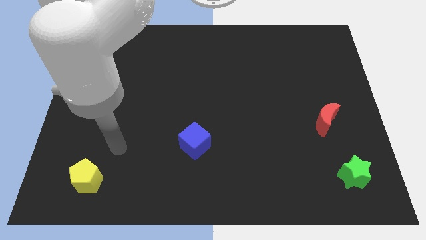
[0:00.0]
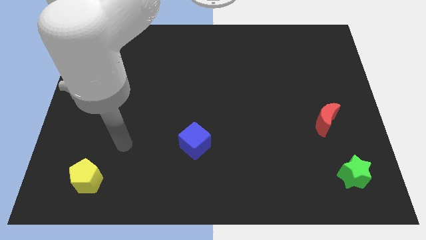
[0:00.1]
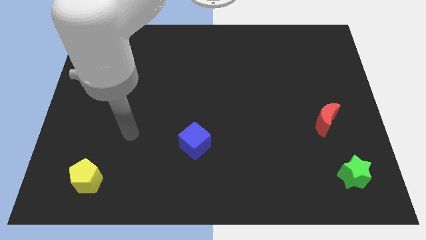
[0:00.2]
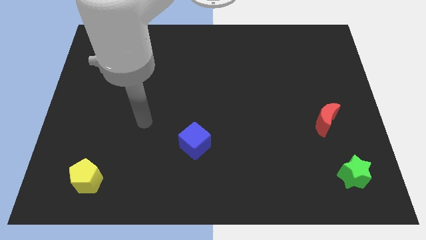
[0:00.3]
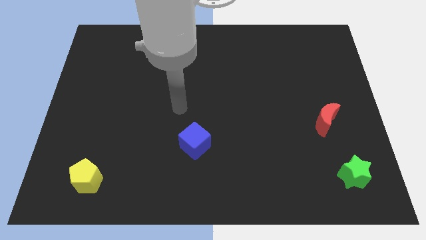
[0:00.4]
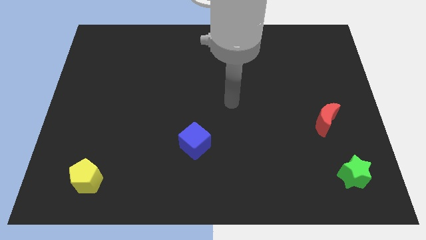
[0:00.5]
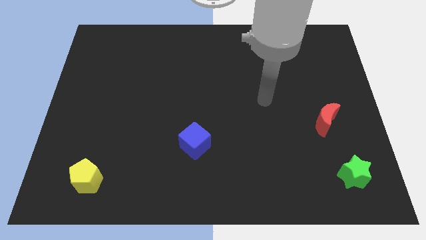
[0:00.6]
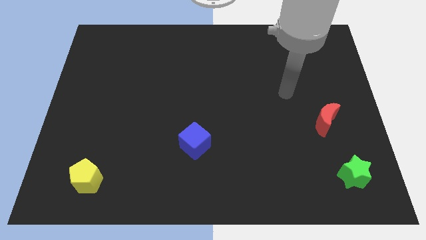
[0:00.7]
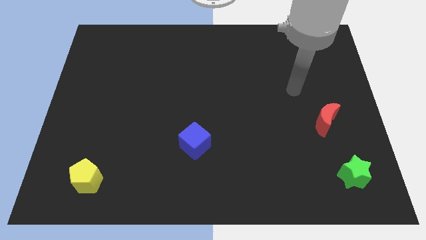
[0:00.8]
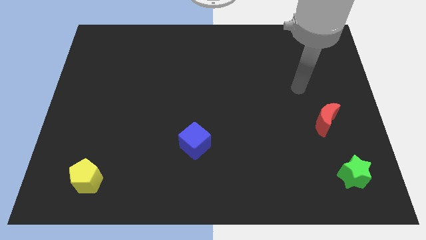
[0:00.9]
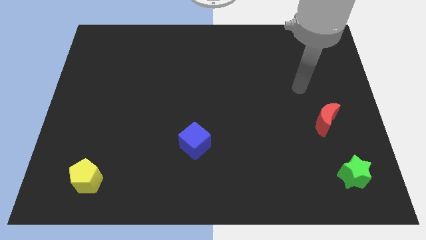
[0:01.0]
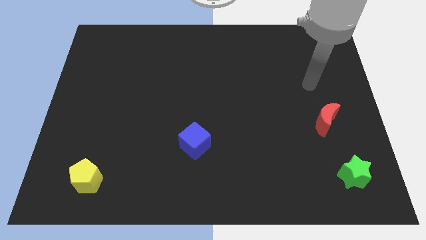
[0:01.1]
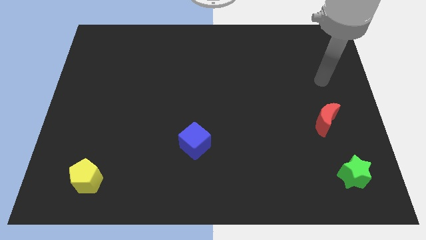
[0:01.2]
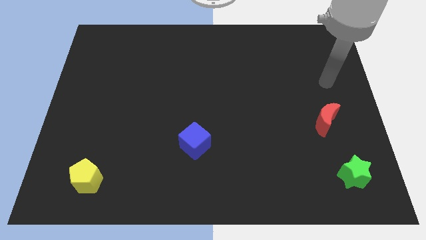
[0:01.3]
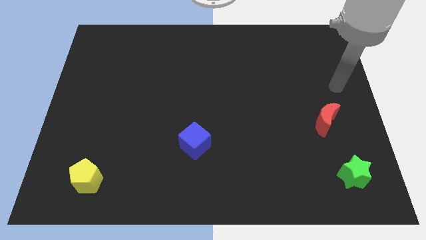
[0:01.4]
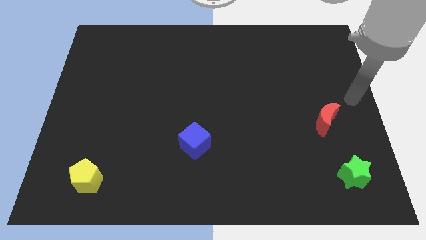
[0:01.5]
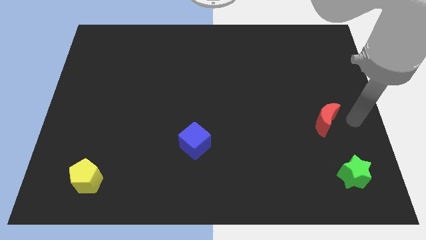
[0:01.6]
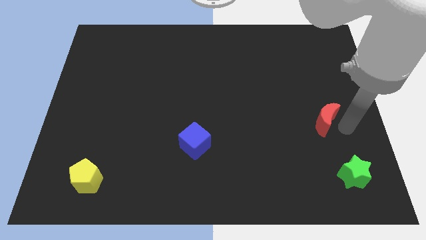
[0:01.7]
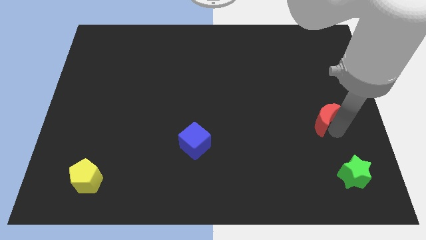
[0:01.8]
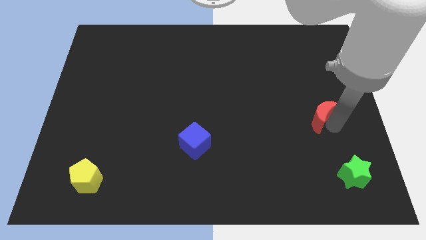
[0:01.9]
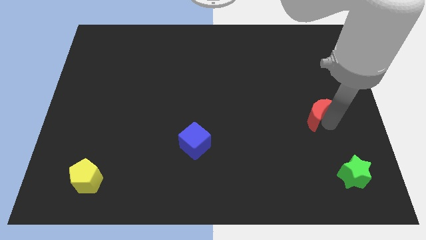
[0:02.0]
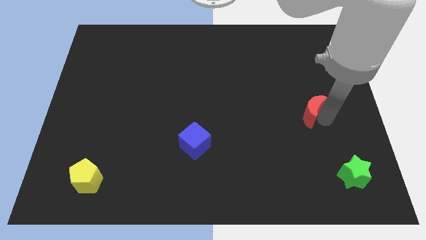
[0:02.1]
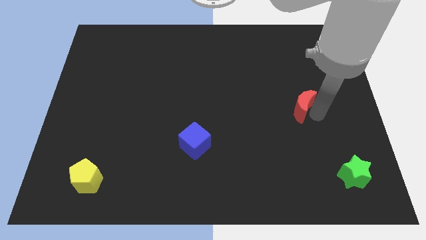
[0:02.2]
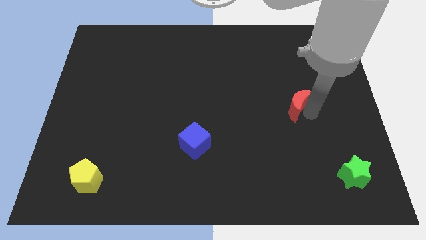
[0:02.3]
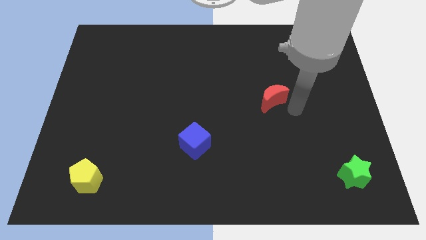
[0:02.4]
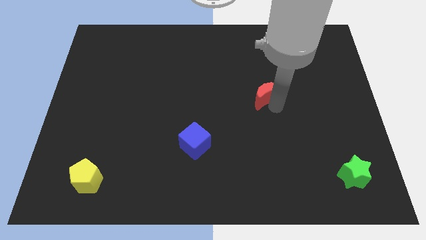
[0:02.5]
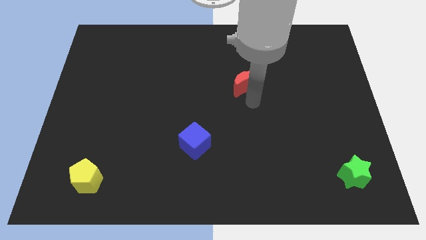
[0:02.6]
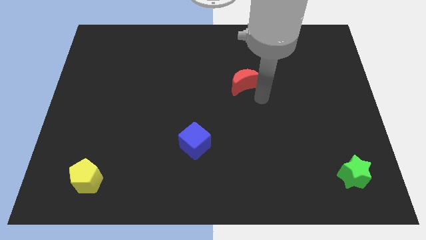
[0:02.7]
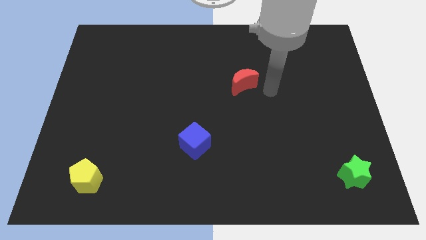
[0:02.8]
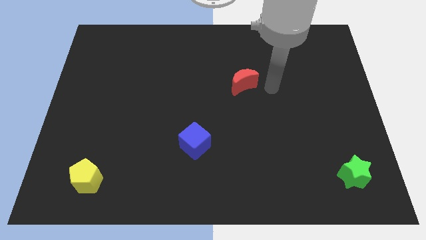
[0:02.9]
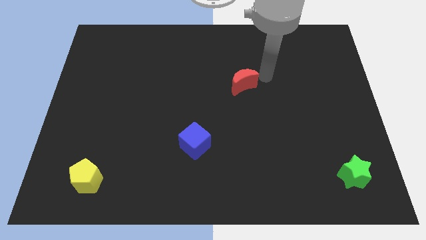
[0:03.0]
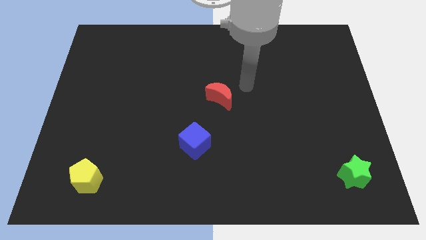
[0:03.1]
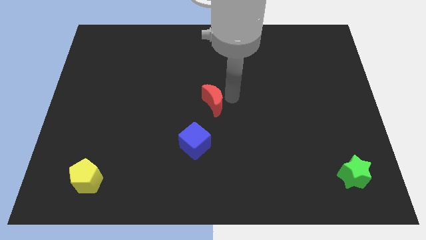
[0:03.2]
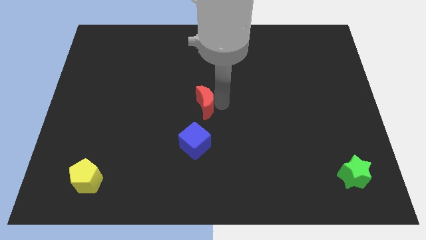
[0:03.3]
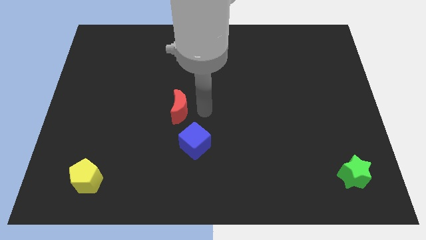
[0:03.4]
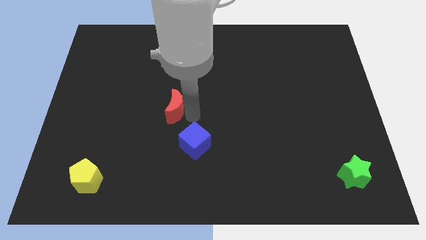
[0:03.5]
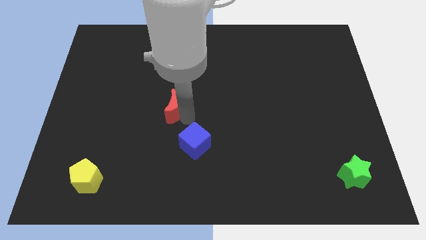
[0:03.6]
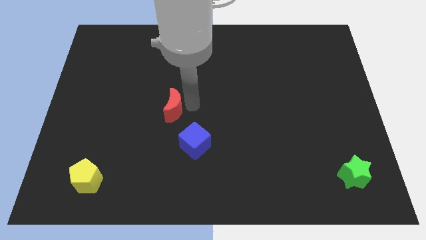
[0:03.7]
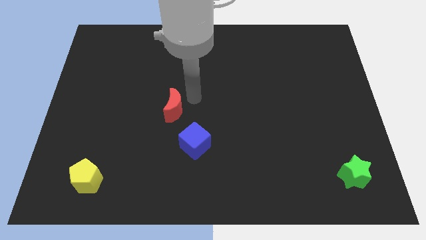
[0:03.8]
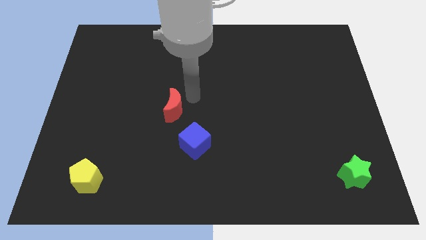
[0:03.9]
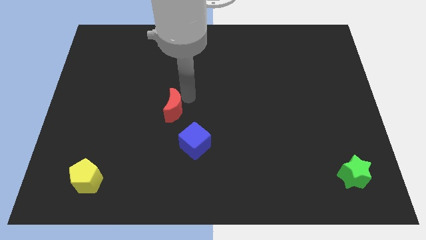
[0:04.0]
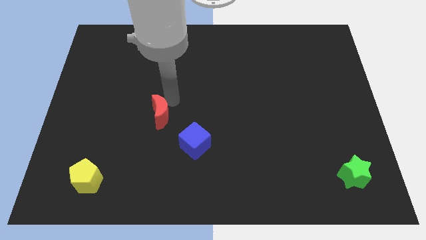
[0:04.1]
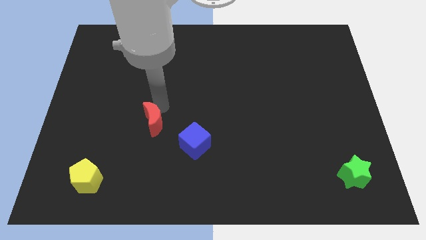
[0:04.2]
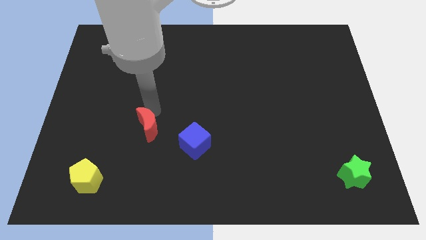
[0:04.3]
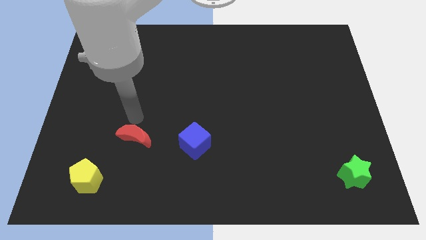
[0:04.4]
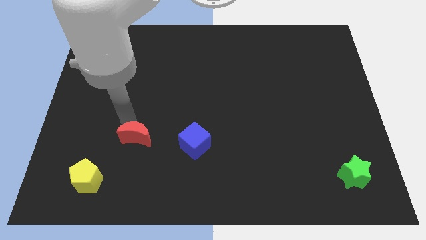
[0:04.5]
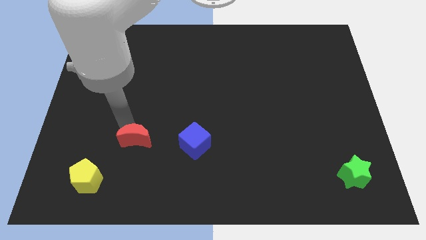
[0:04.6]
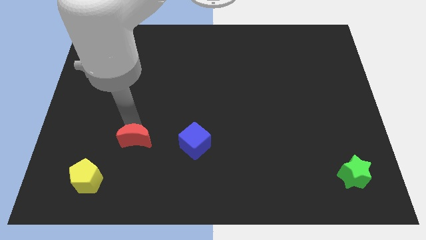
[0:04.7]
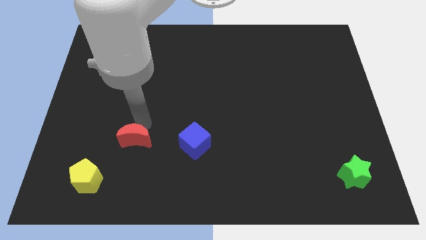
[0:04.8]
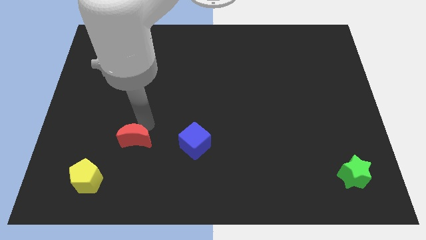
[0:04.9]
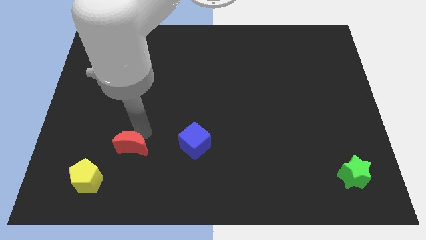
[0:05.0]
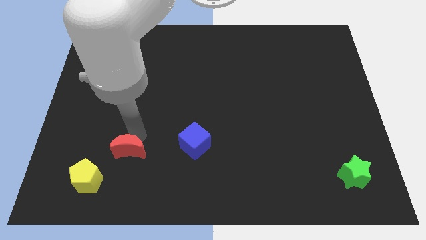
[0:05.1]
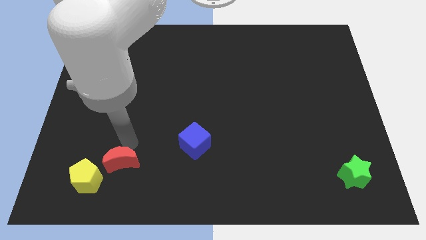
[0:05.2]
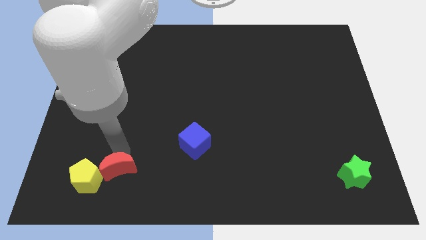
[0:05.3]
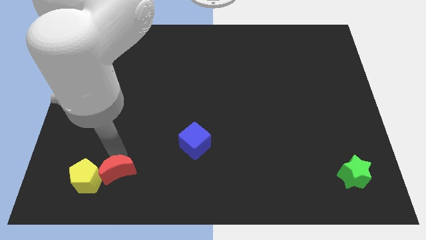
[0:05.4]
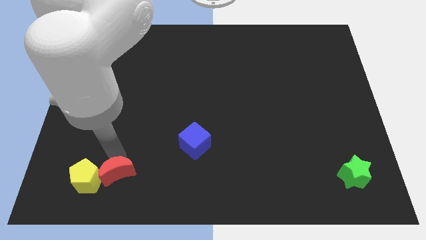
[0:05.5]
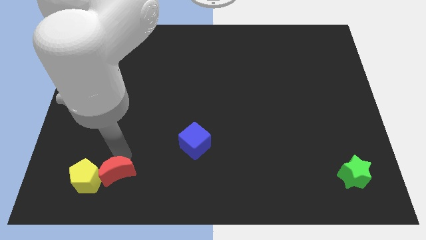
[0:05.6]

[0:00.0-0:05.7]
slide the red moon next to the yellow pentagon

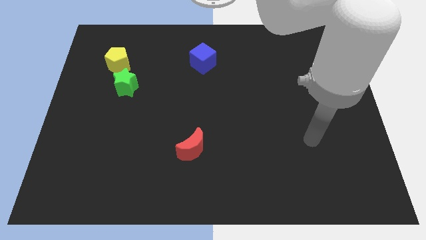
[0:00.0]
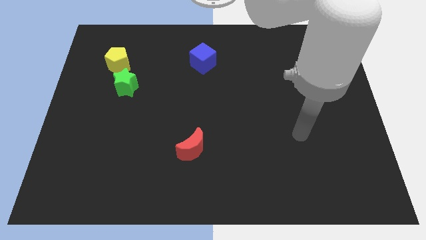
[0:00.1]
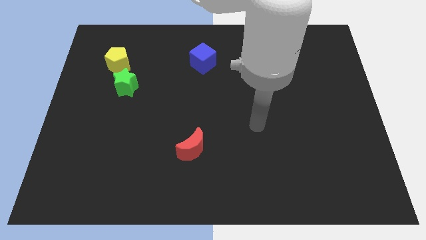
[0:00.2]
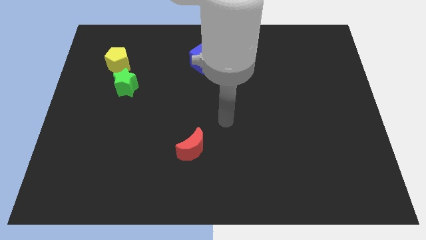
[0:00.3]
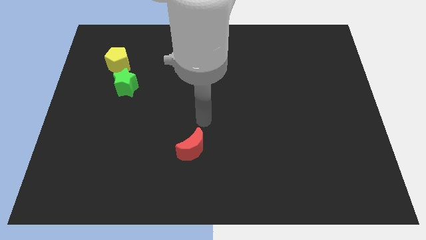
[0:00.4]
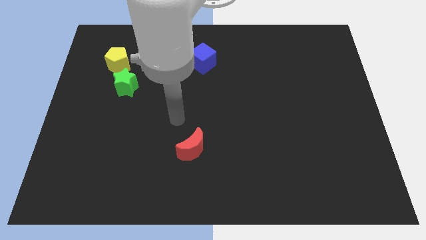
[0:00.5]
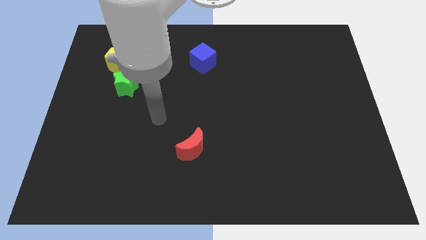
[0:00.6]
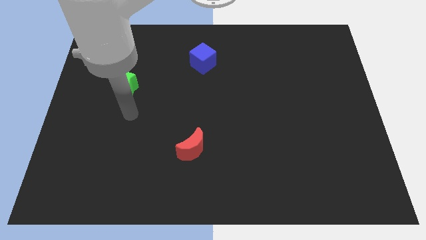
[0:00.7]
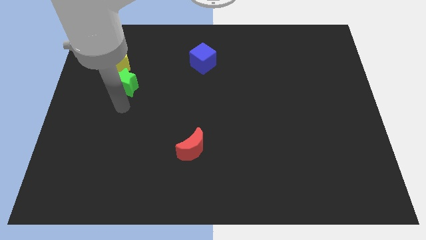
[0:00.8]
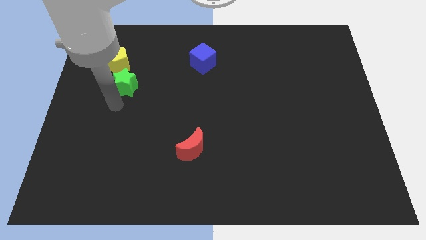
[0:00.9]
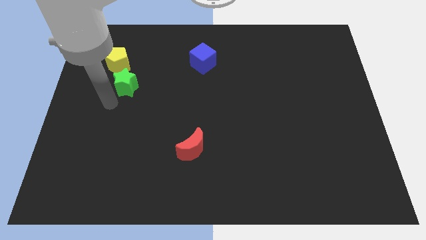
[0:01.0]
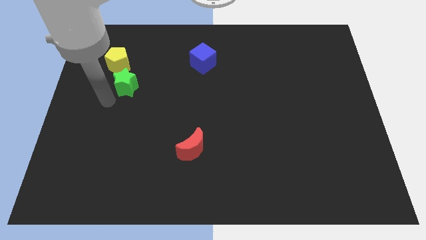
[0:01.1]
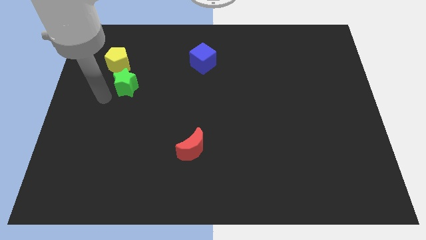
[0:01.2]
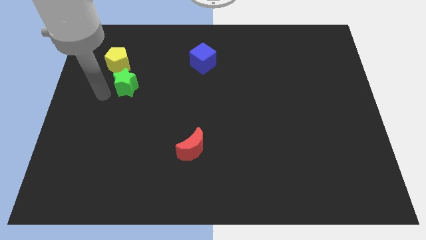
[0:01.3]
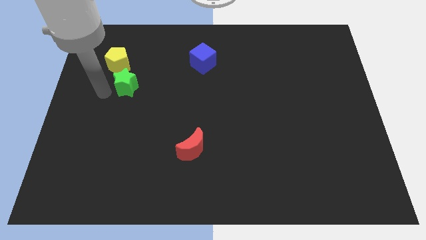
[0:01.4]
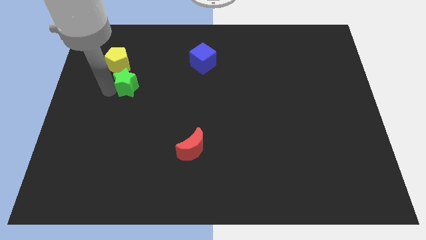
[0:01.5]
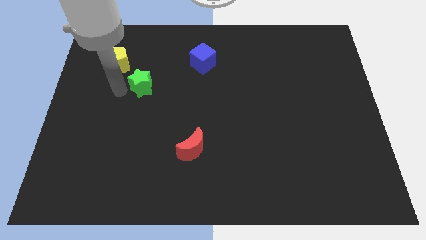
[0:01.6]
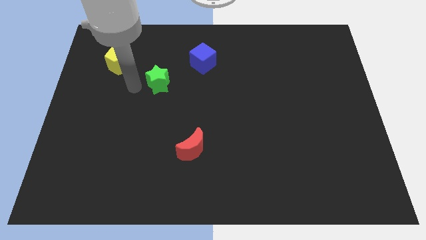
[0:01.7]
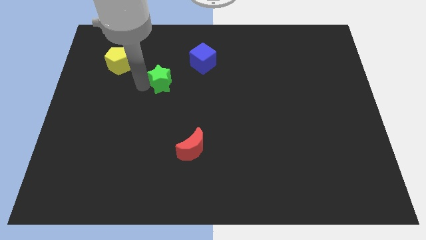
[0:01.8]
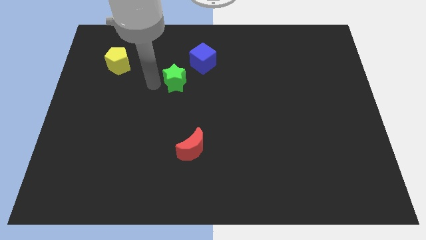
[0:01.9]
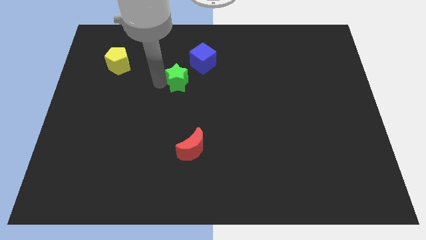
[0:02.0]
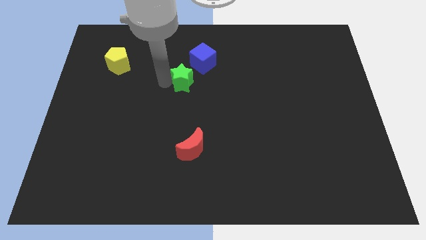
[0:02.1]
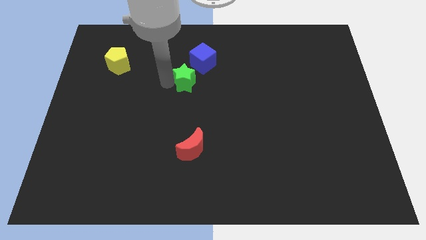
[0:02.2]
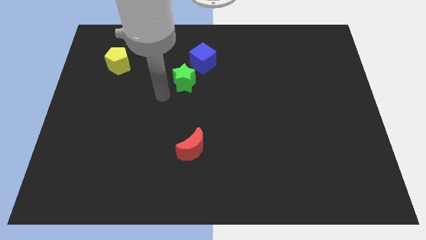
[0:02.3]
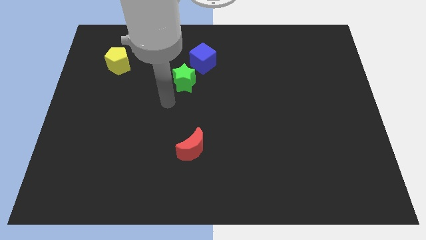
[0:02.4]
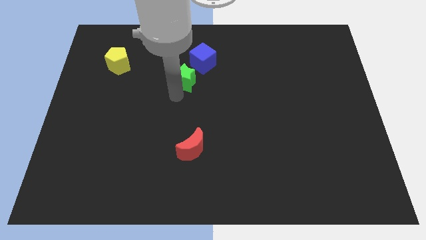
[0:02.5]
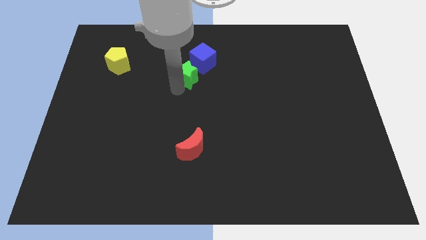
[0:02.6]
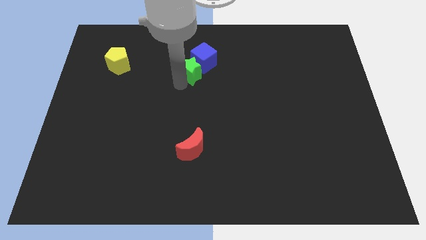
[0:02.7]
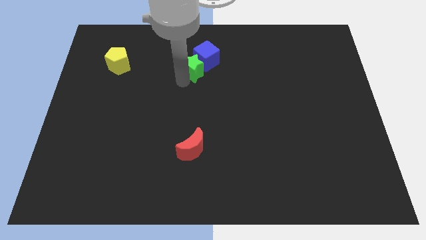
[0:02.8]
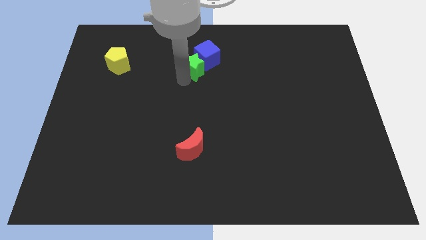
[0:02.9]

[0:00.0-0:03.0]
put the green block next to the blue block
